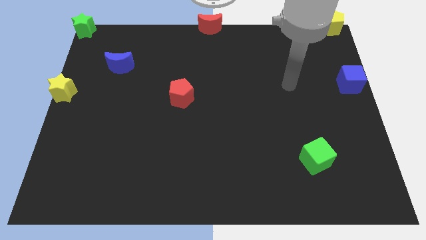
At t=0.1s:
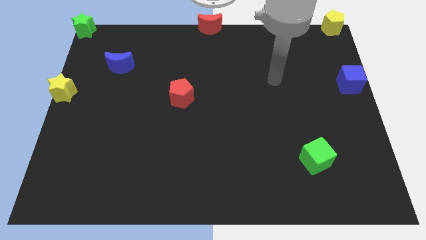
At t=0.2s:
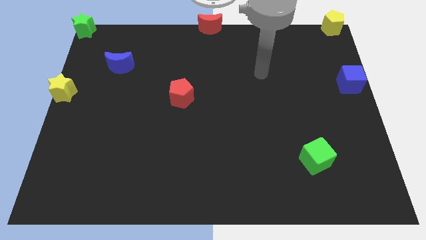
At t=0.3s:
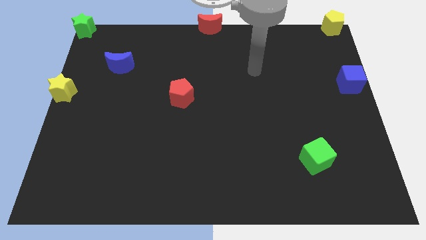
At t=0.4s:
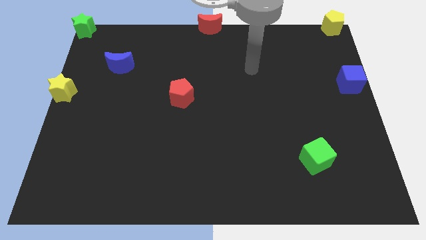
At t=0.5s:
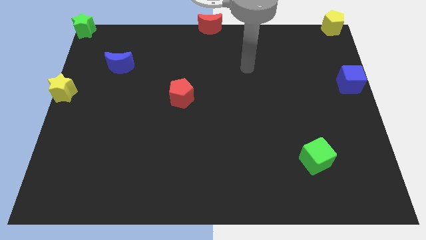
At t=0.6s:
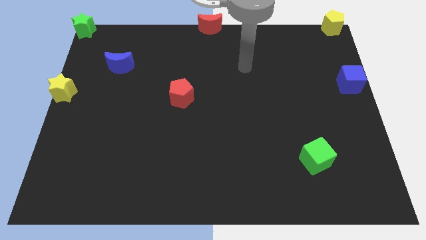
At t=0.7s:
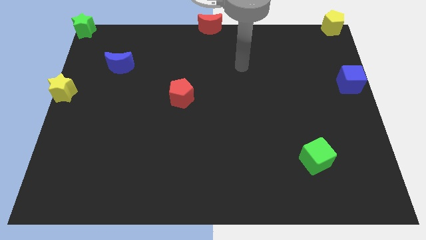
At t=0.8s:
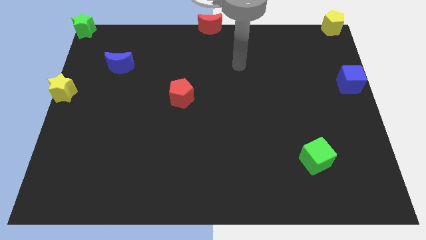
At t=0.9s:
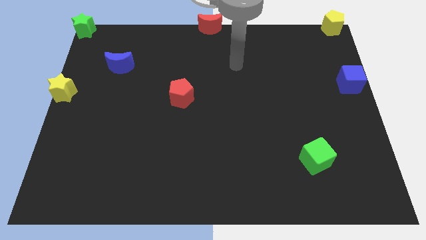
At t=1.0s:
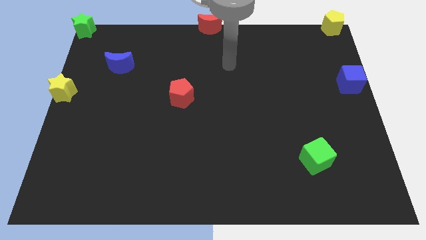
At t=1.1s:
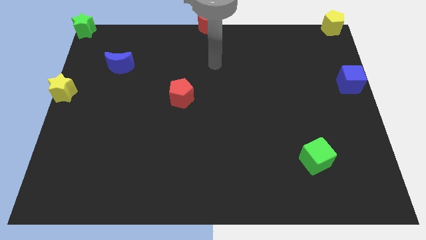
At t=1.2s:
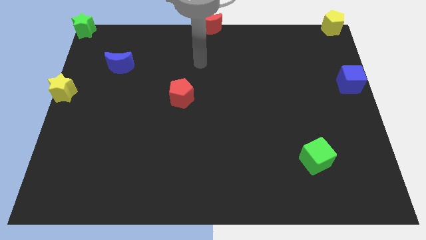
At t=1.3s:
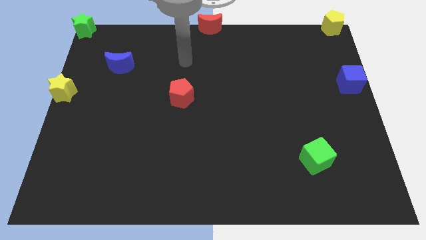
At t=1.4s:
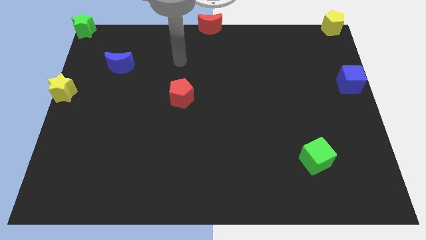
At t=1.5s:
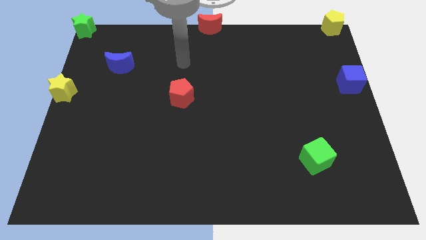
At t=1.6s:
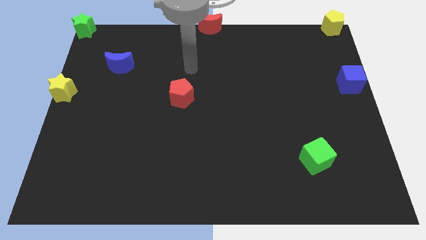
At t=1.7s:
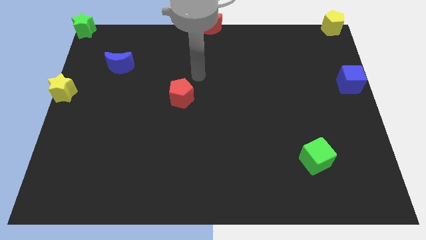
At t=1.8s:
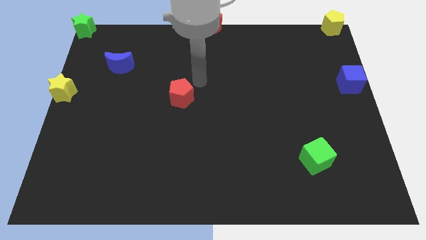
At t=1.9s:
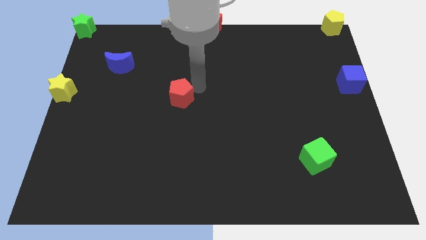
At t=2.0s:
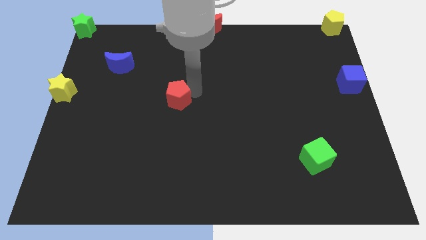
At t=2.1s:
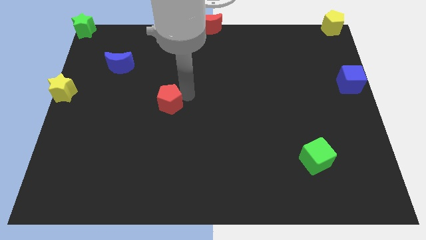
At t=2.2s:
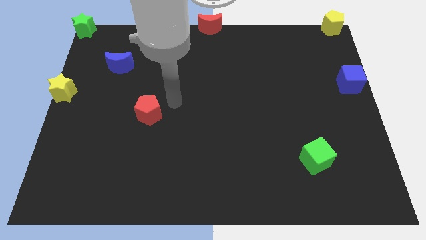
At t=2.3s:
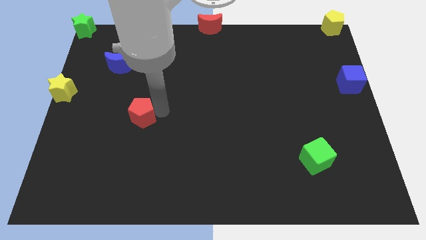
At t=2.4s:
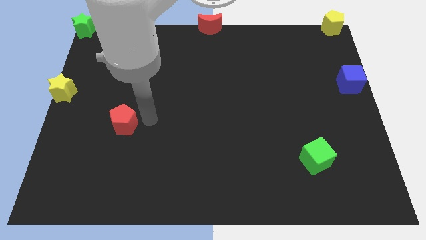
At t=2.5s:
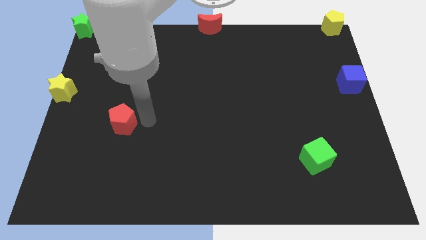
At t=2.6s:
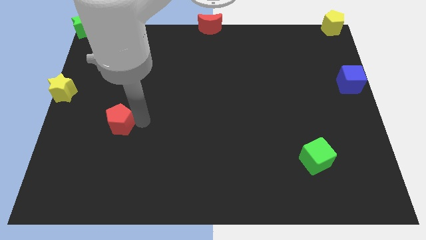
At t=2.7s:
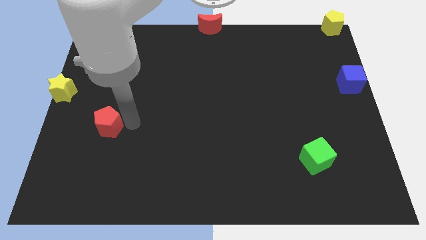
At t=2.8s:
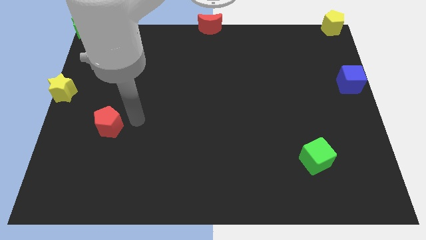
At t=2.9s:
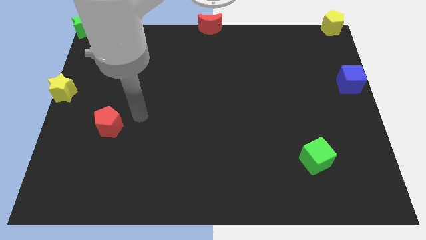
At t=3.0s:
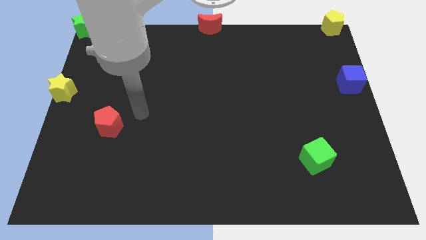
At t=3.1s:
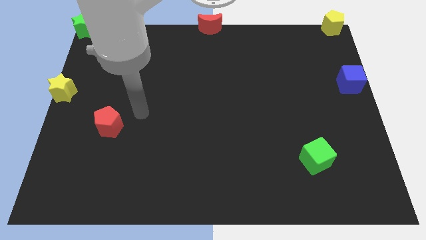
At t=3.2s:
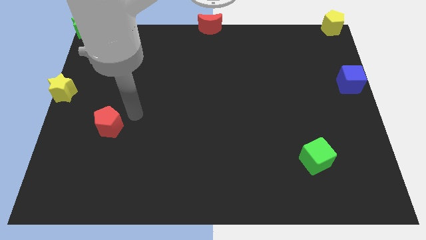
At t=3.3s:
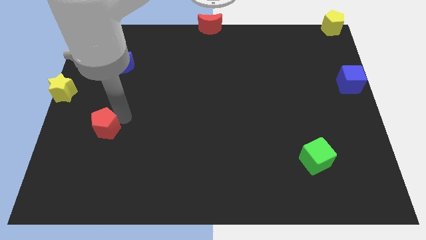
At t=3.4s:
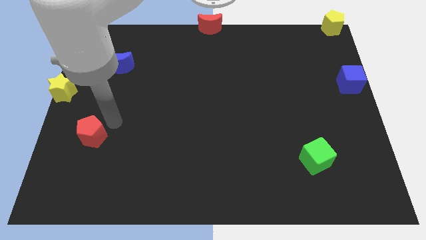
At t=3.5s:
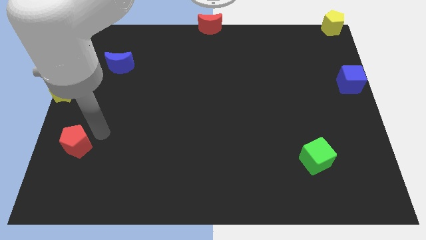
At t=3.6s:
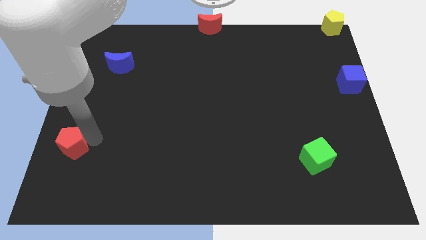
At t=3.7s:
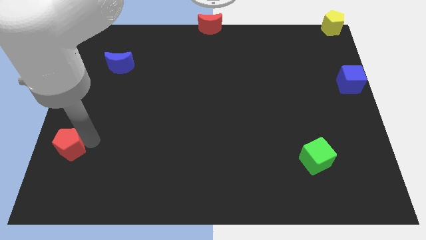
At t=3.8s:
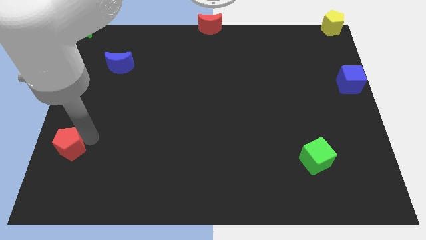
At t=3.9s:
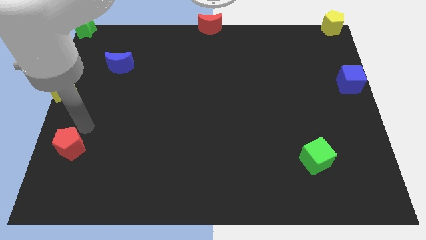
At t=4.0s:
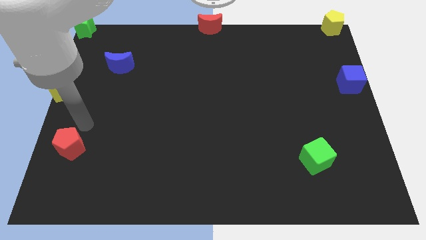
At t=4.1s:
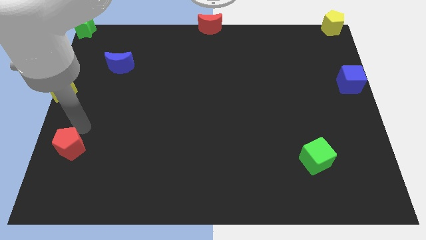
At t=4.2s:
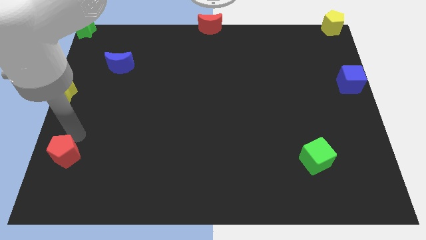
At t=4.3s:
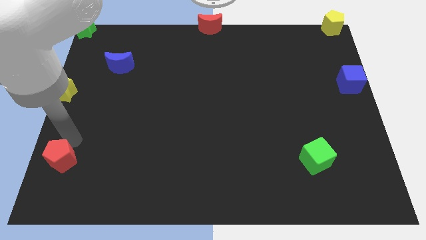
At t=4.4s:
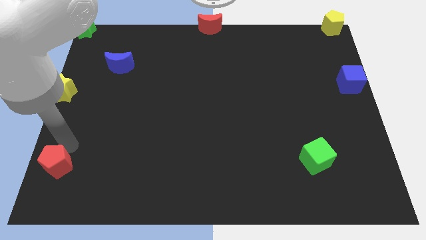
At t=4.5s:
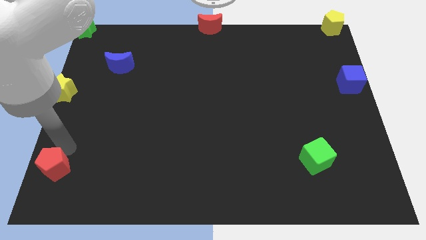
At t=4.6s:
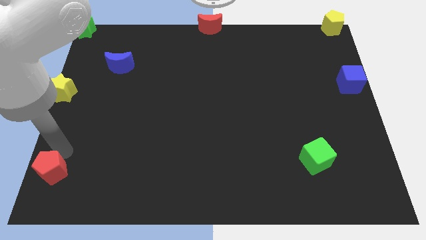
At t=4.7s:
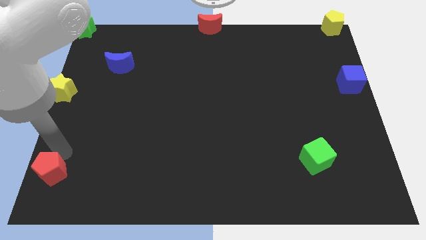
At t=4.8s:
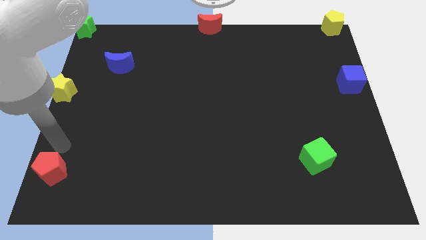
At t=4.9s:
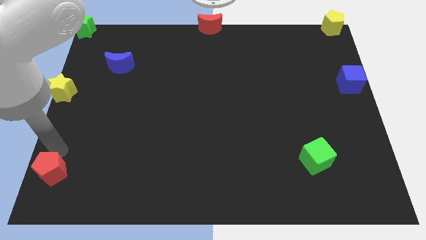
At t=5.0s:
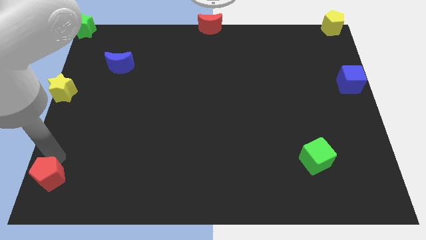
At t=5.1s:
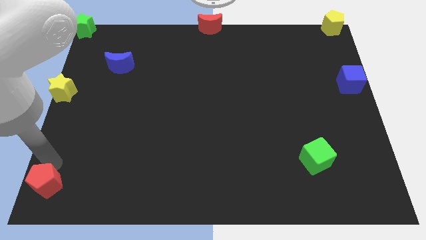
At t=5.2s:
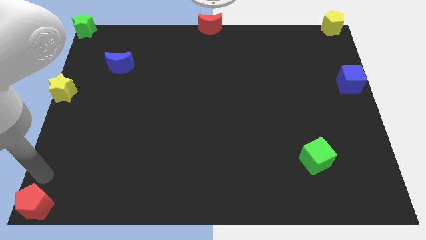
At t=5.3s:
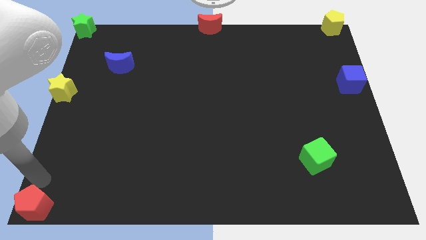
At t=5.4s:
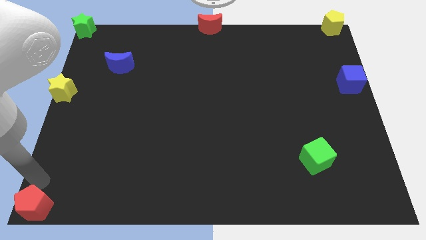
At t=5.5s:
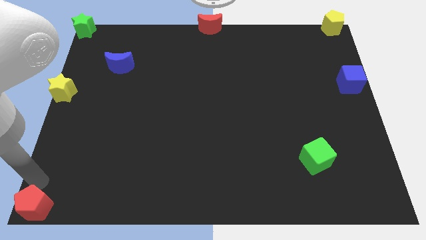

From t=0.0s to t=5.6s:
move red pentagon to the bottom left corner of the board

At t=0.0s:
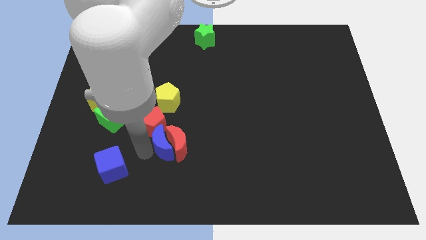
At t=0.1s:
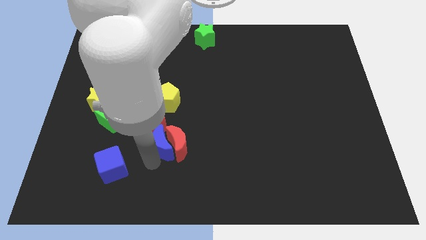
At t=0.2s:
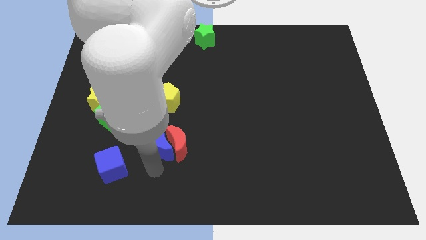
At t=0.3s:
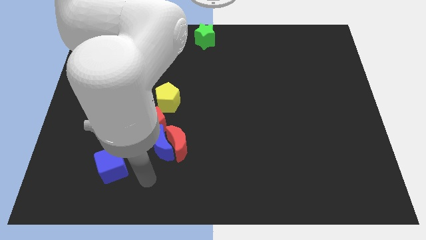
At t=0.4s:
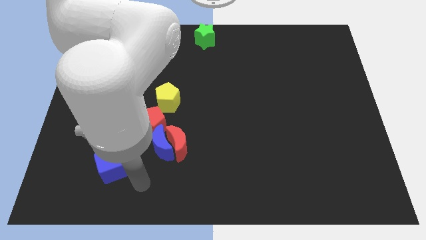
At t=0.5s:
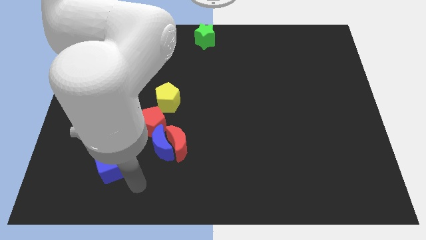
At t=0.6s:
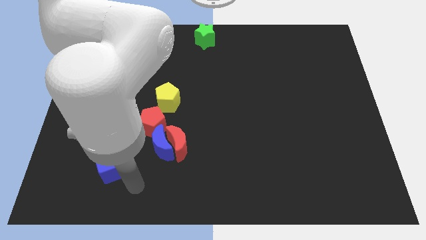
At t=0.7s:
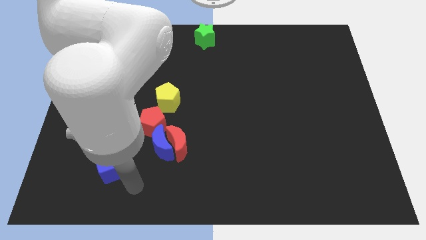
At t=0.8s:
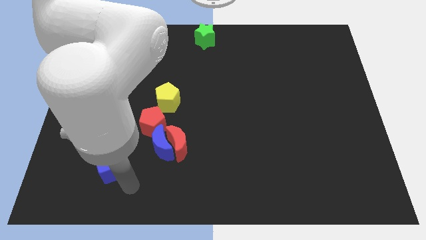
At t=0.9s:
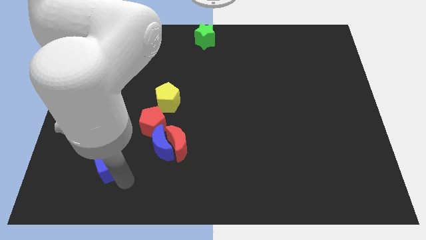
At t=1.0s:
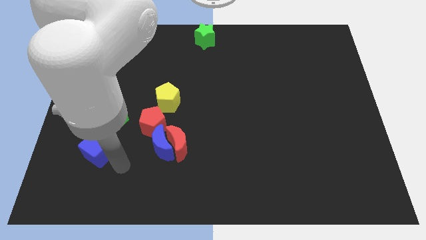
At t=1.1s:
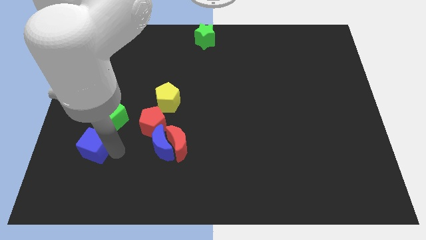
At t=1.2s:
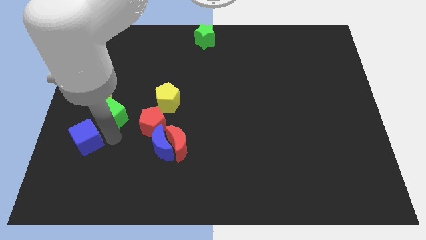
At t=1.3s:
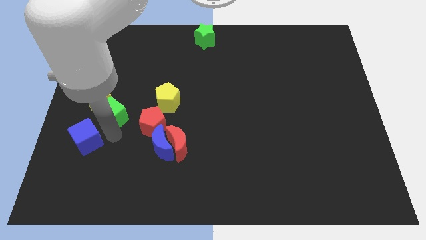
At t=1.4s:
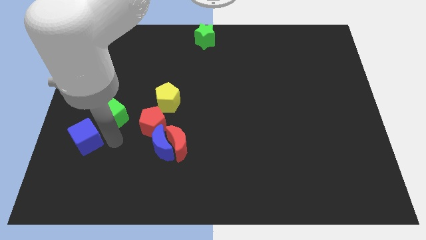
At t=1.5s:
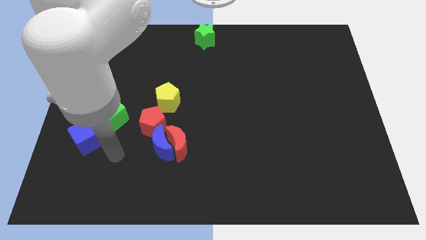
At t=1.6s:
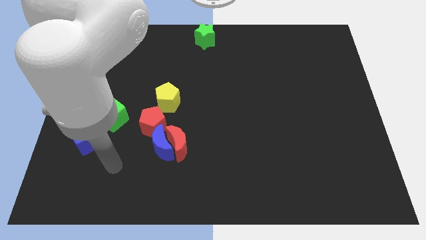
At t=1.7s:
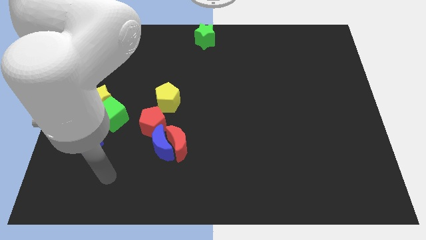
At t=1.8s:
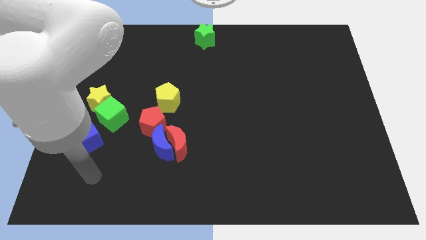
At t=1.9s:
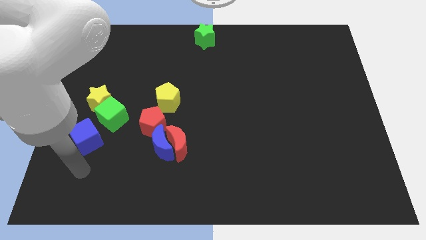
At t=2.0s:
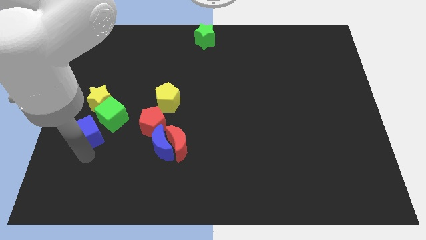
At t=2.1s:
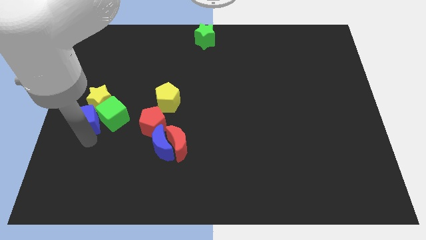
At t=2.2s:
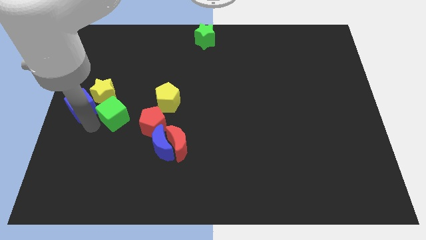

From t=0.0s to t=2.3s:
push the blue cube to the left of the green cube

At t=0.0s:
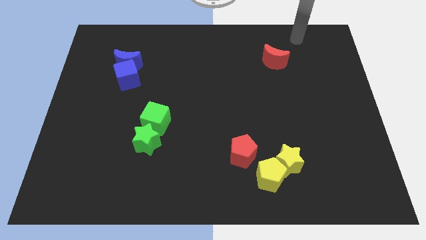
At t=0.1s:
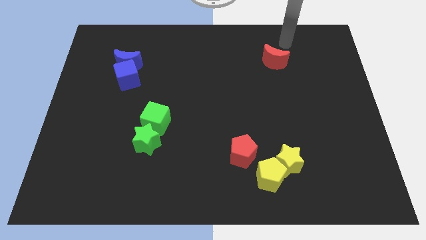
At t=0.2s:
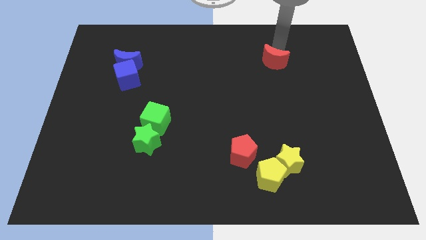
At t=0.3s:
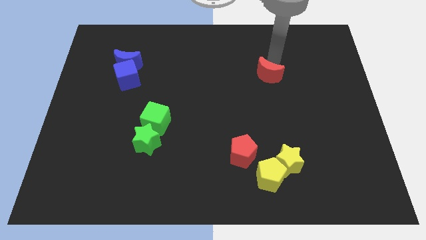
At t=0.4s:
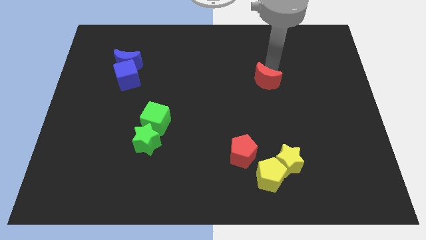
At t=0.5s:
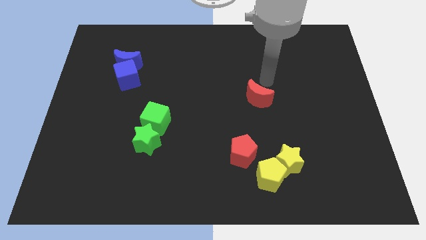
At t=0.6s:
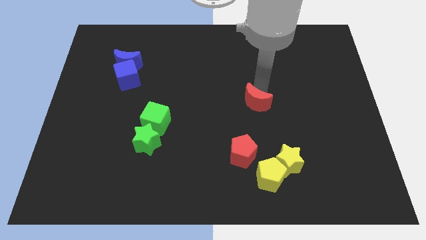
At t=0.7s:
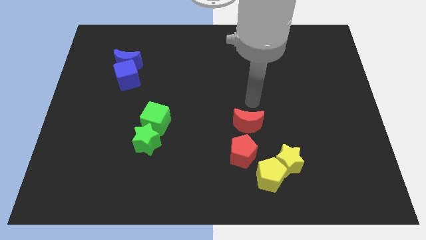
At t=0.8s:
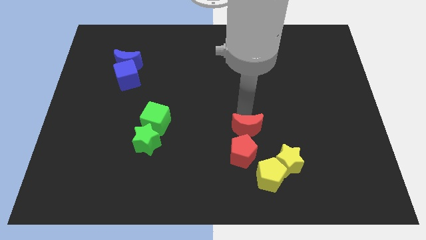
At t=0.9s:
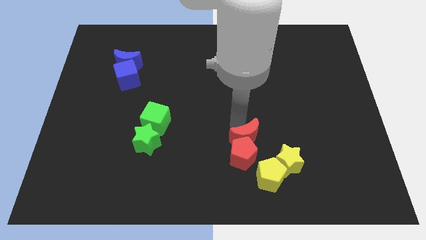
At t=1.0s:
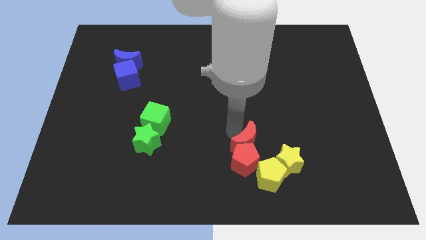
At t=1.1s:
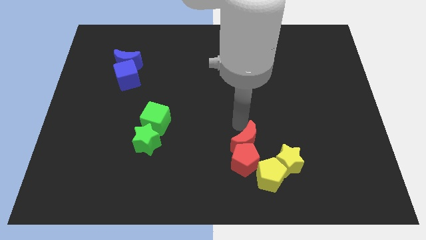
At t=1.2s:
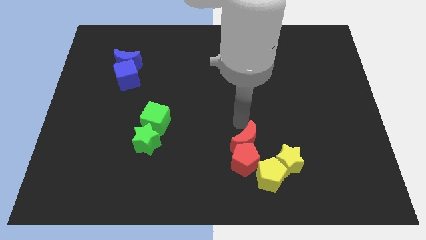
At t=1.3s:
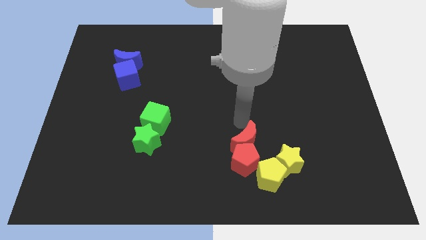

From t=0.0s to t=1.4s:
move the red crescent into the red pentagon
